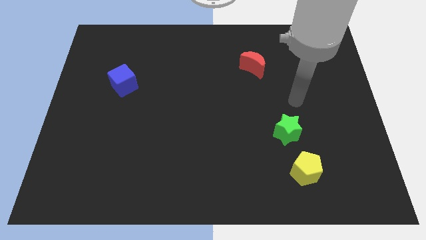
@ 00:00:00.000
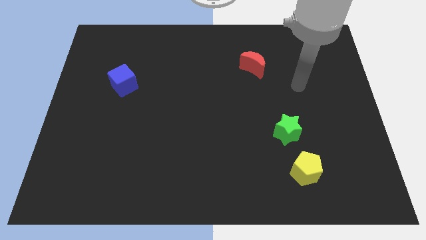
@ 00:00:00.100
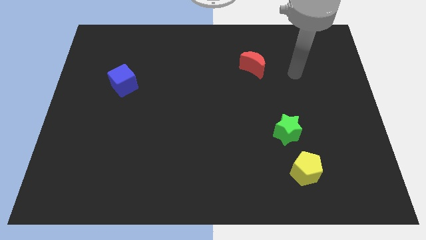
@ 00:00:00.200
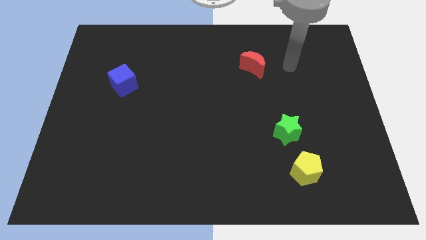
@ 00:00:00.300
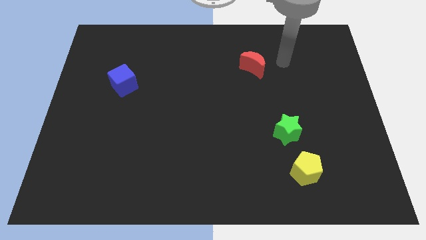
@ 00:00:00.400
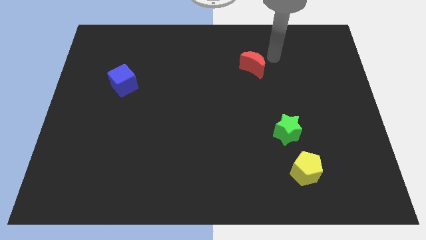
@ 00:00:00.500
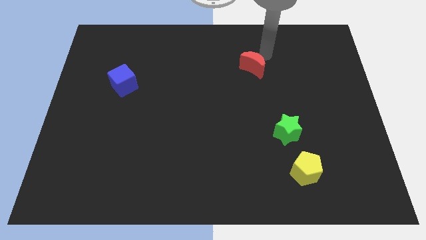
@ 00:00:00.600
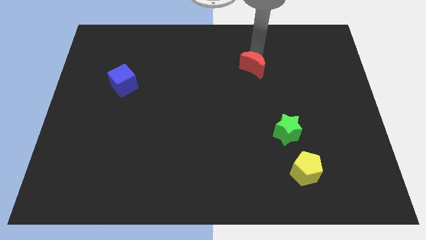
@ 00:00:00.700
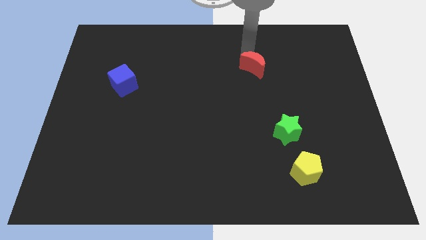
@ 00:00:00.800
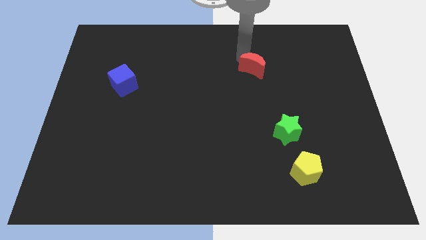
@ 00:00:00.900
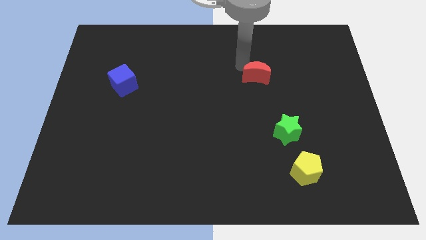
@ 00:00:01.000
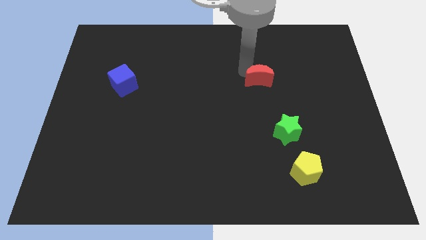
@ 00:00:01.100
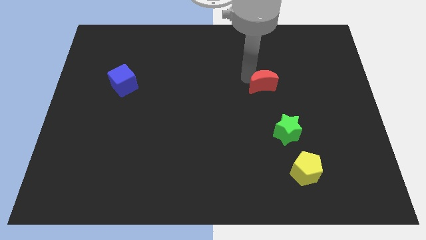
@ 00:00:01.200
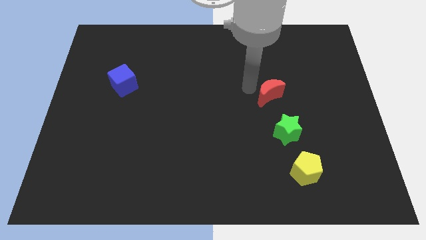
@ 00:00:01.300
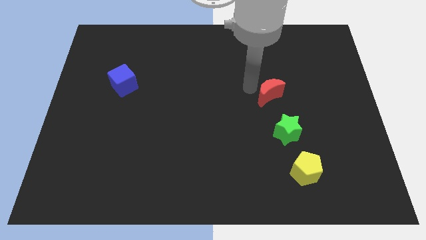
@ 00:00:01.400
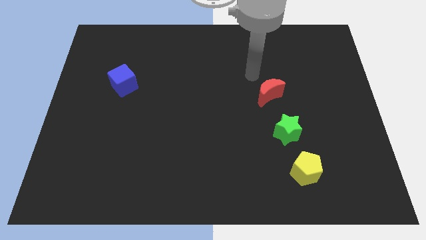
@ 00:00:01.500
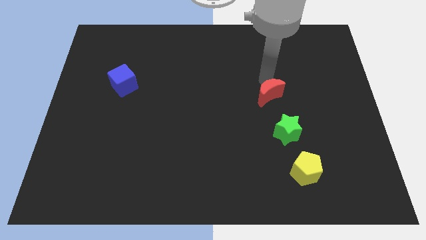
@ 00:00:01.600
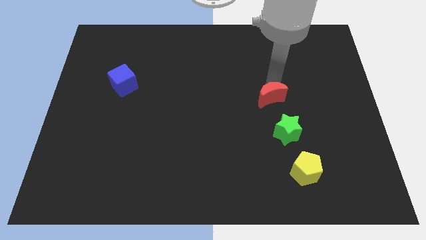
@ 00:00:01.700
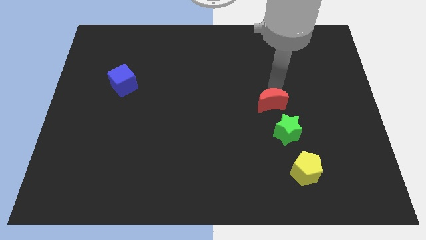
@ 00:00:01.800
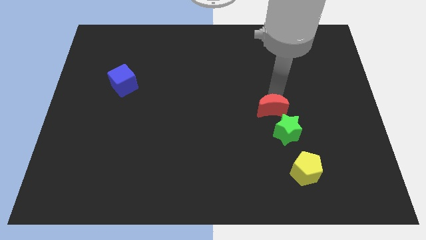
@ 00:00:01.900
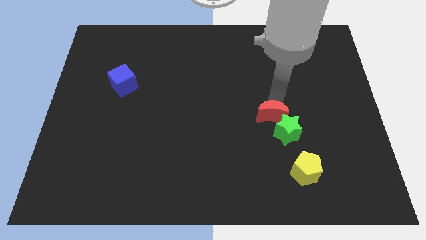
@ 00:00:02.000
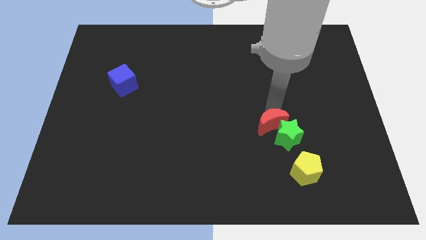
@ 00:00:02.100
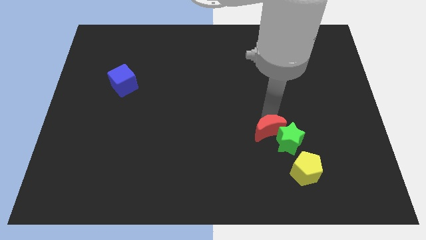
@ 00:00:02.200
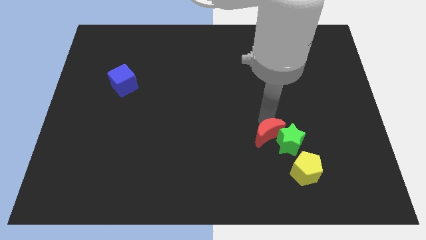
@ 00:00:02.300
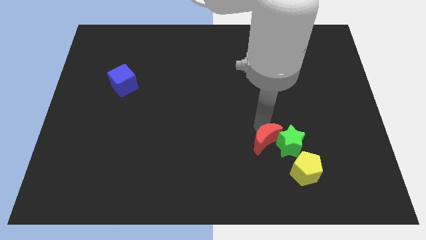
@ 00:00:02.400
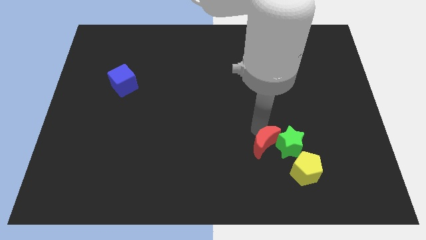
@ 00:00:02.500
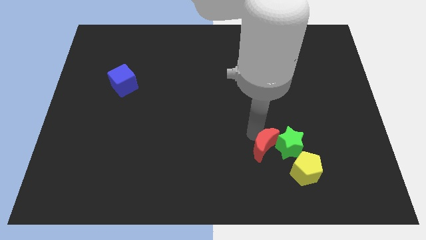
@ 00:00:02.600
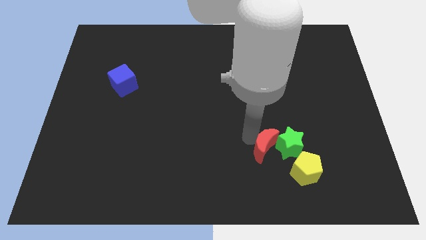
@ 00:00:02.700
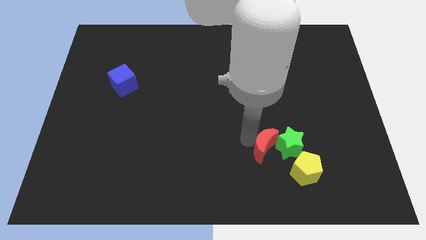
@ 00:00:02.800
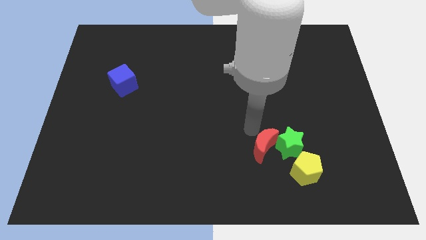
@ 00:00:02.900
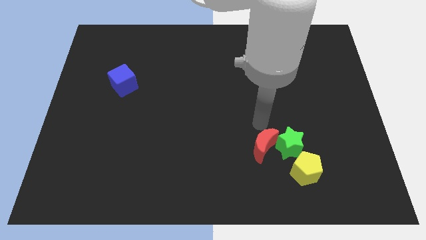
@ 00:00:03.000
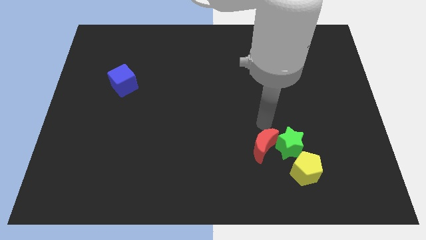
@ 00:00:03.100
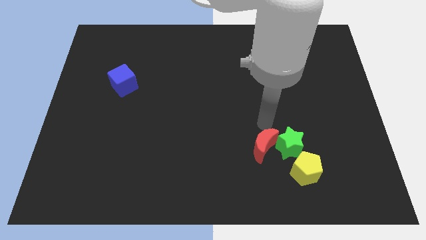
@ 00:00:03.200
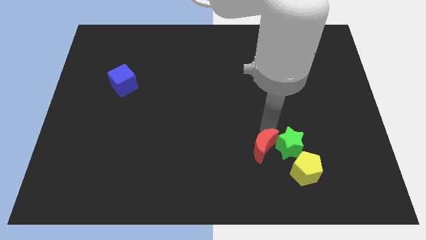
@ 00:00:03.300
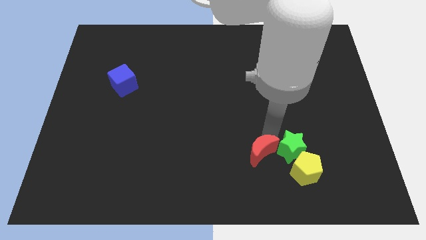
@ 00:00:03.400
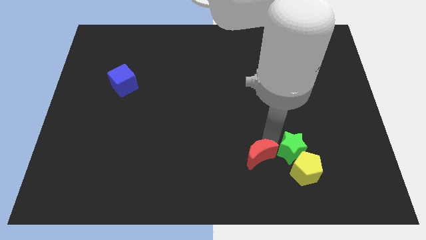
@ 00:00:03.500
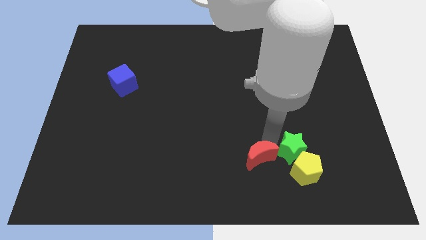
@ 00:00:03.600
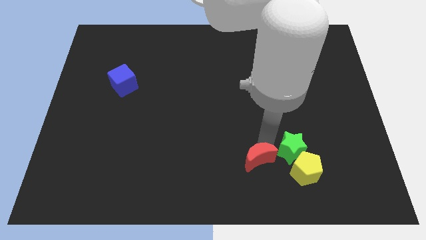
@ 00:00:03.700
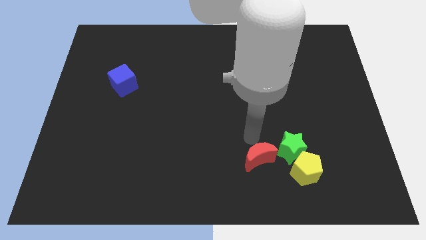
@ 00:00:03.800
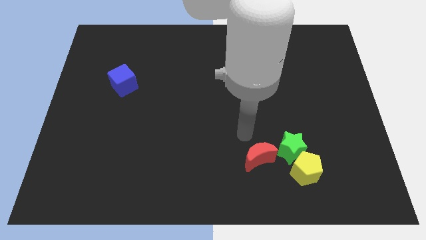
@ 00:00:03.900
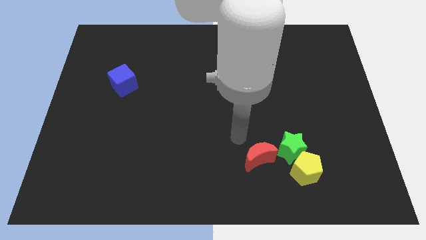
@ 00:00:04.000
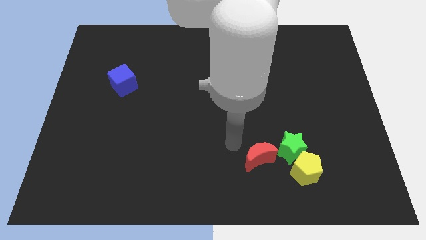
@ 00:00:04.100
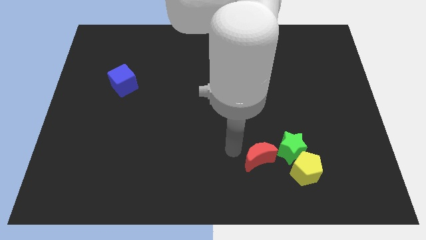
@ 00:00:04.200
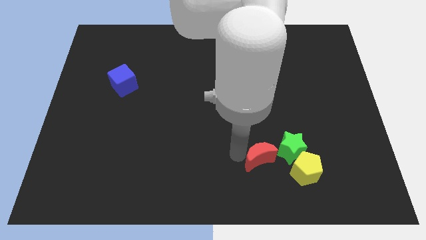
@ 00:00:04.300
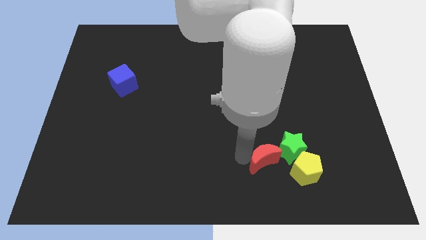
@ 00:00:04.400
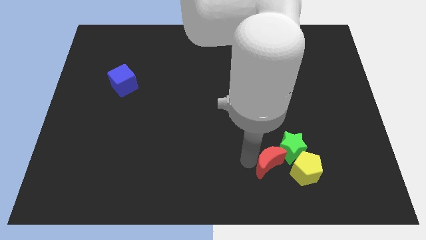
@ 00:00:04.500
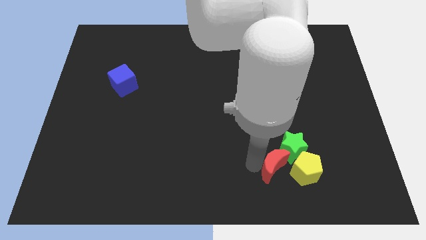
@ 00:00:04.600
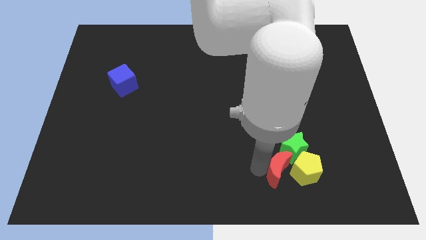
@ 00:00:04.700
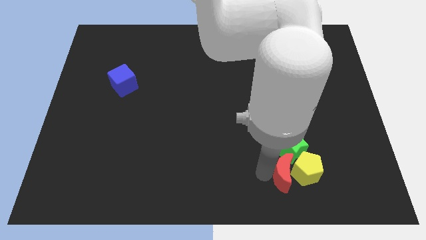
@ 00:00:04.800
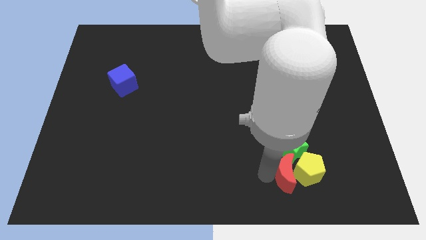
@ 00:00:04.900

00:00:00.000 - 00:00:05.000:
put the red block to the yellow pentagon

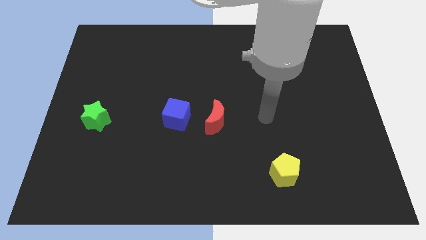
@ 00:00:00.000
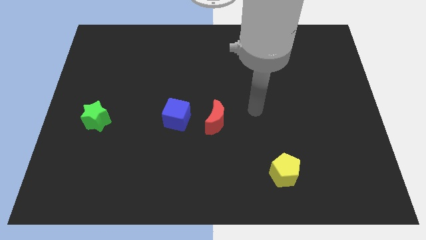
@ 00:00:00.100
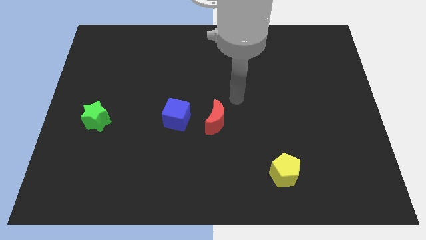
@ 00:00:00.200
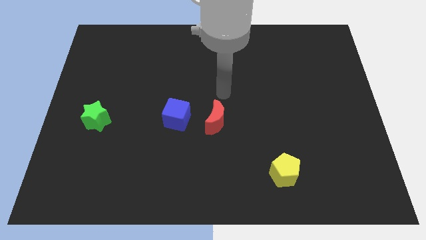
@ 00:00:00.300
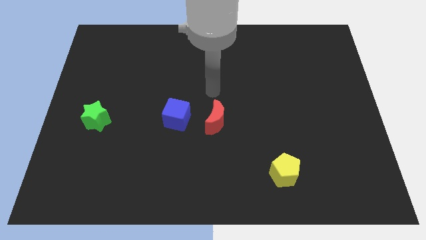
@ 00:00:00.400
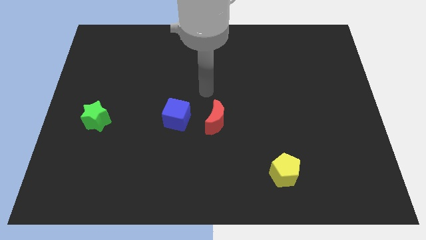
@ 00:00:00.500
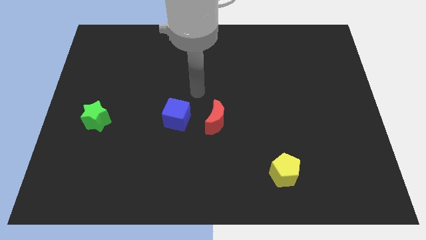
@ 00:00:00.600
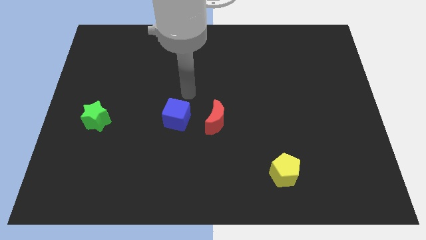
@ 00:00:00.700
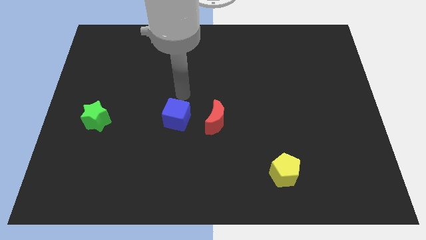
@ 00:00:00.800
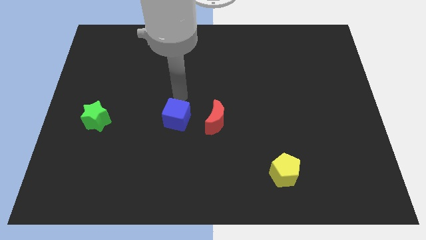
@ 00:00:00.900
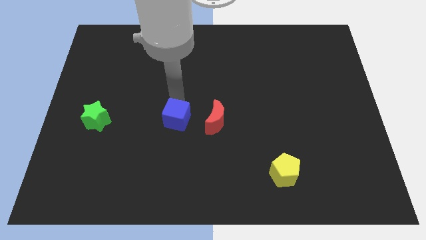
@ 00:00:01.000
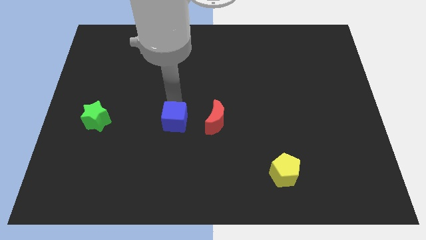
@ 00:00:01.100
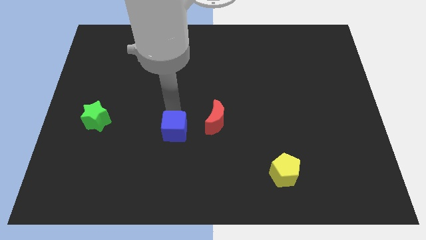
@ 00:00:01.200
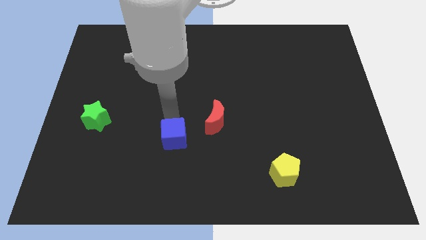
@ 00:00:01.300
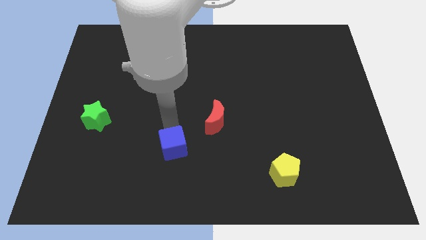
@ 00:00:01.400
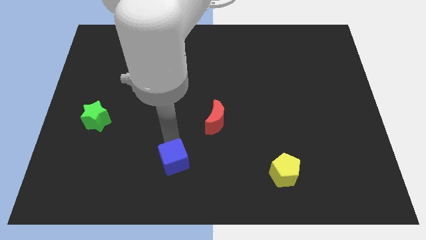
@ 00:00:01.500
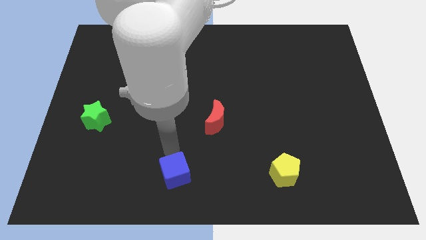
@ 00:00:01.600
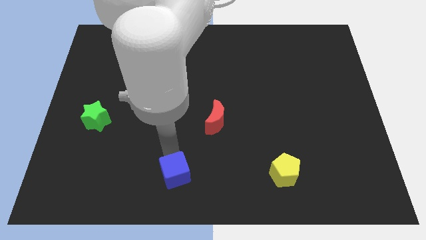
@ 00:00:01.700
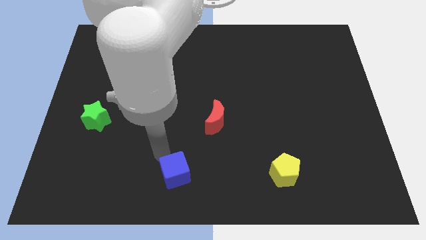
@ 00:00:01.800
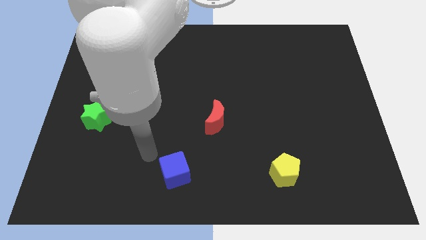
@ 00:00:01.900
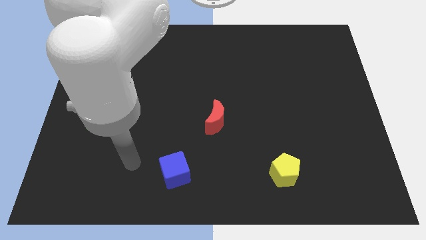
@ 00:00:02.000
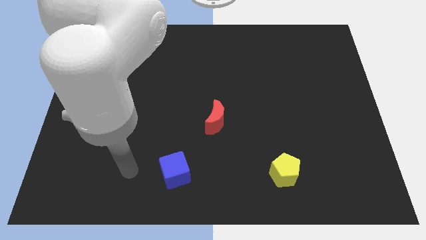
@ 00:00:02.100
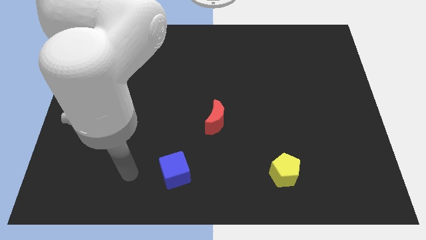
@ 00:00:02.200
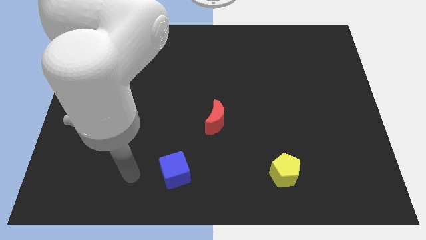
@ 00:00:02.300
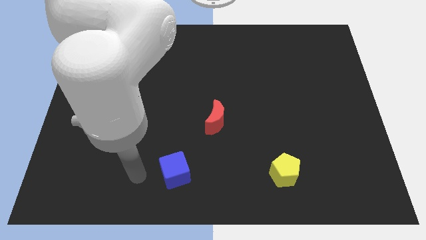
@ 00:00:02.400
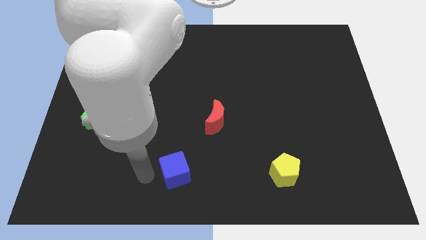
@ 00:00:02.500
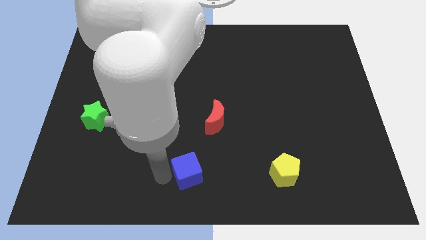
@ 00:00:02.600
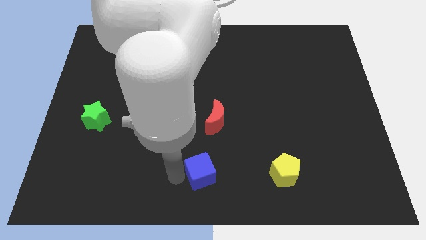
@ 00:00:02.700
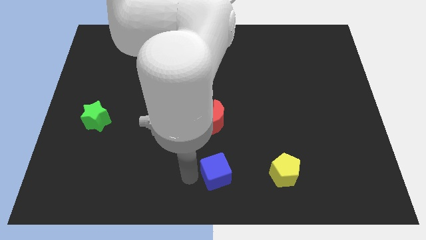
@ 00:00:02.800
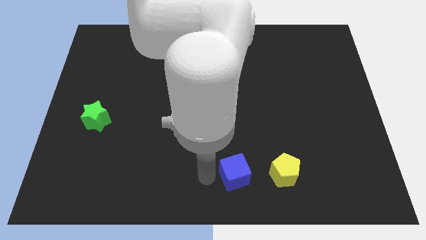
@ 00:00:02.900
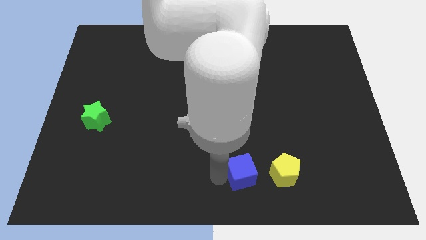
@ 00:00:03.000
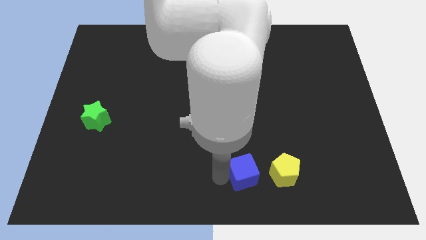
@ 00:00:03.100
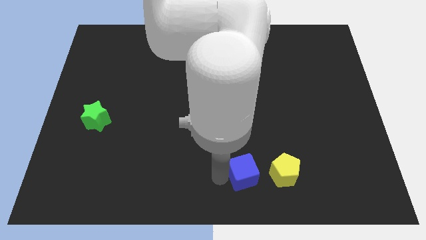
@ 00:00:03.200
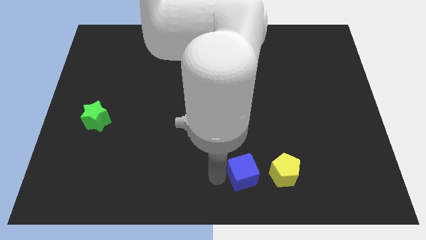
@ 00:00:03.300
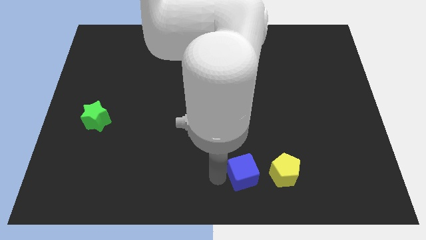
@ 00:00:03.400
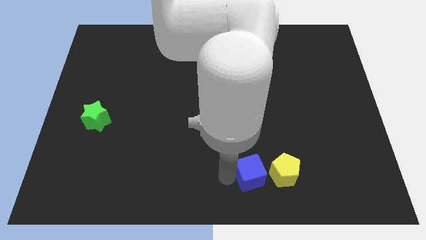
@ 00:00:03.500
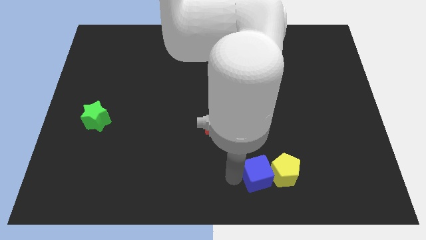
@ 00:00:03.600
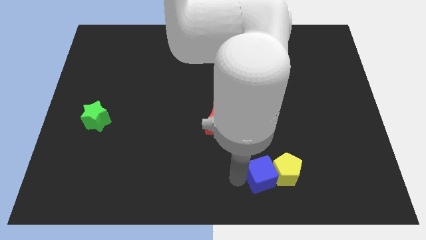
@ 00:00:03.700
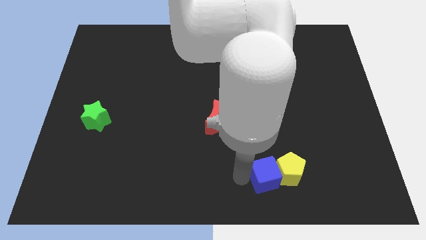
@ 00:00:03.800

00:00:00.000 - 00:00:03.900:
move the cube close to the pentagon
